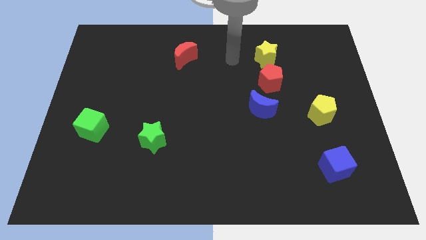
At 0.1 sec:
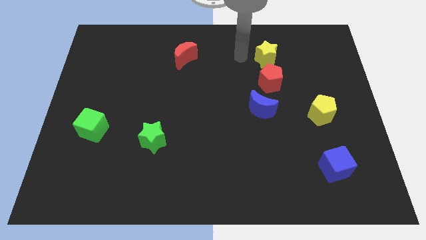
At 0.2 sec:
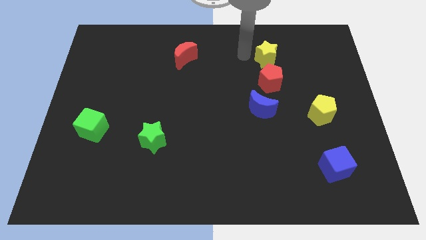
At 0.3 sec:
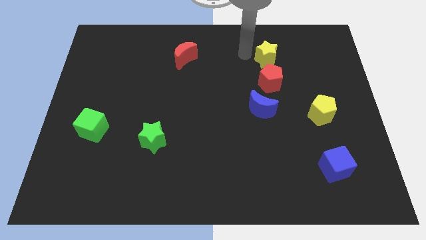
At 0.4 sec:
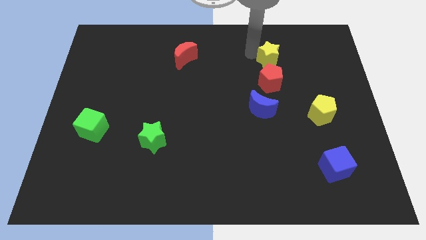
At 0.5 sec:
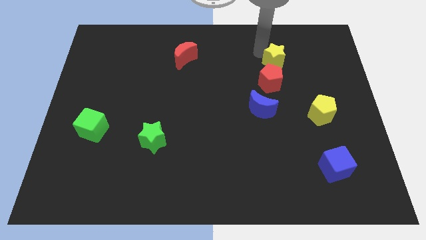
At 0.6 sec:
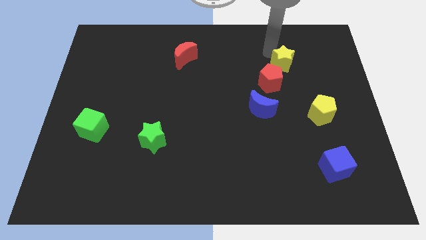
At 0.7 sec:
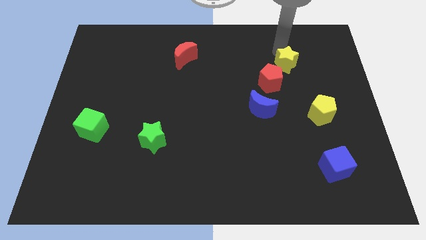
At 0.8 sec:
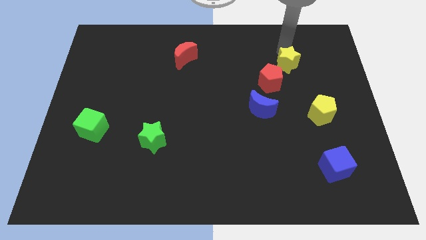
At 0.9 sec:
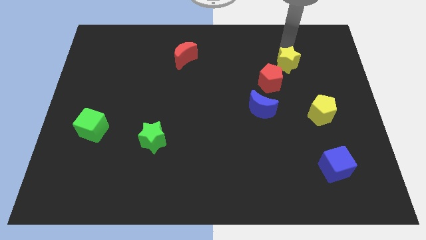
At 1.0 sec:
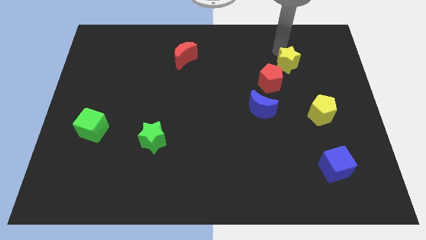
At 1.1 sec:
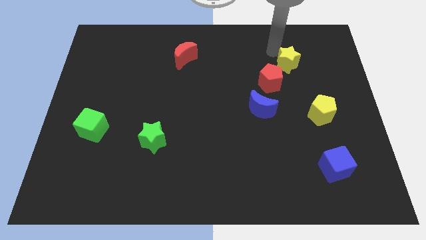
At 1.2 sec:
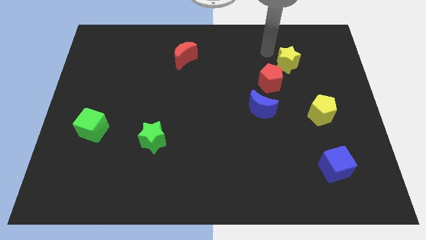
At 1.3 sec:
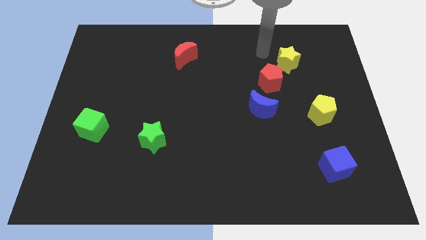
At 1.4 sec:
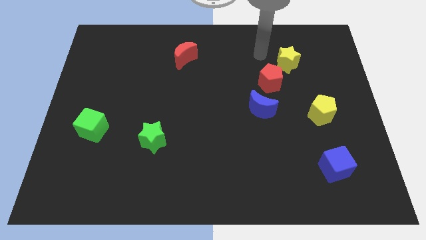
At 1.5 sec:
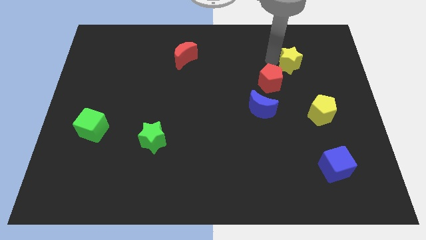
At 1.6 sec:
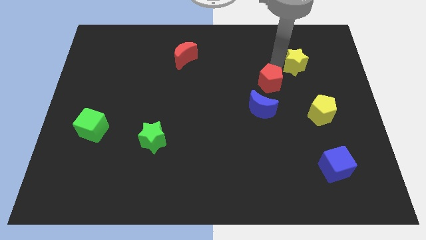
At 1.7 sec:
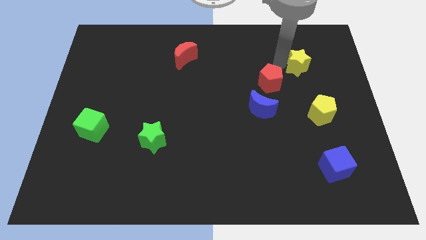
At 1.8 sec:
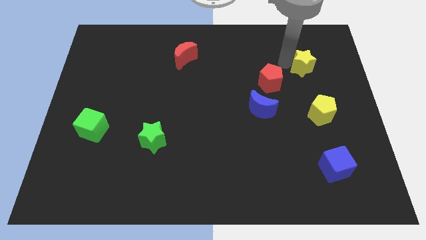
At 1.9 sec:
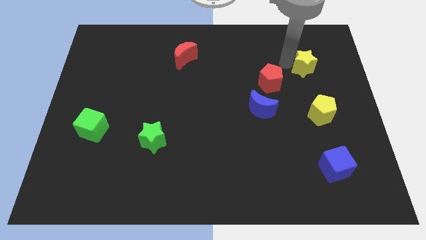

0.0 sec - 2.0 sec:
push the yellow star vertically to the top of the yellow pentagon

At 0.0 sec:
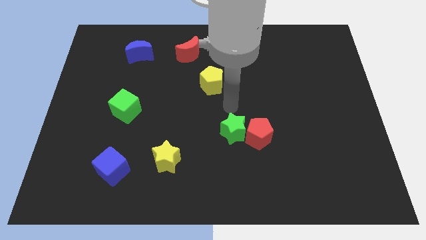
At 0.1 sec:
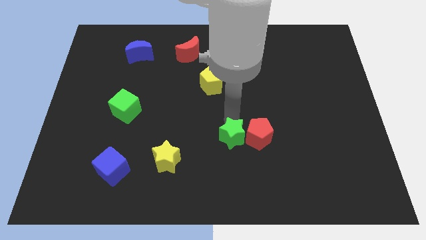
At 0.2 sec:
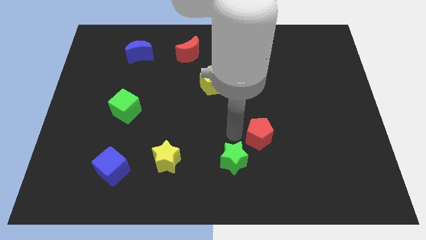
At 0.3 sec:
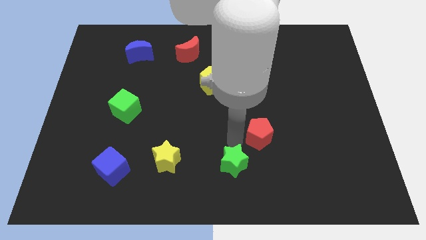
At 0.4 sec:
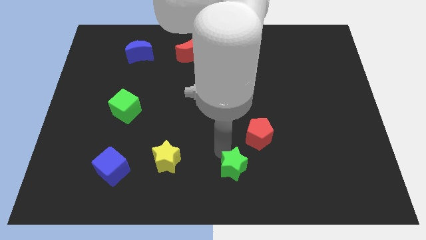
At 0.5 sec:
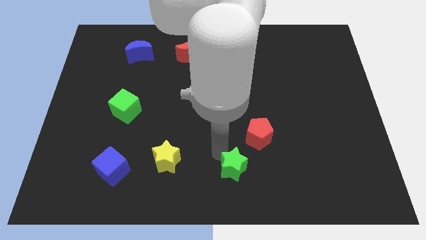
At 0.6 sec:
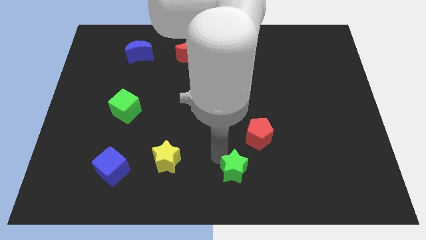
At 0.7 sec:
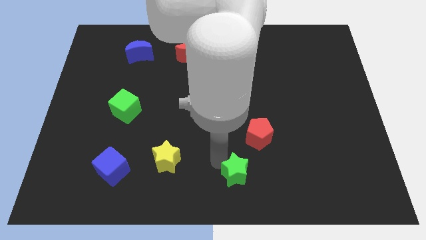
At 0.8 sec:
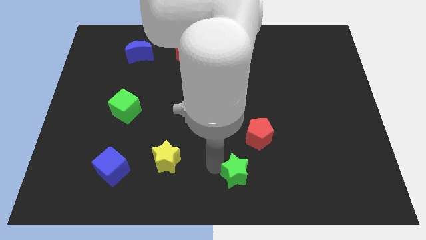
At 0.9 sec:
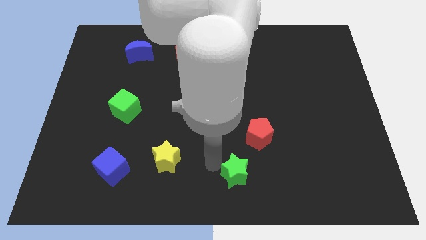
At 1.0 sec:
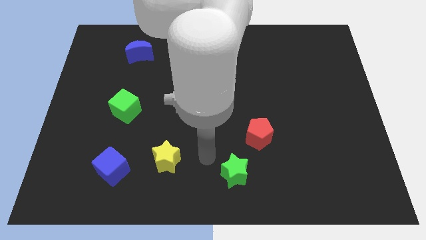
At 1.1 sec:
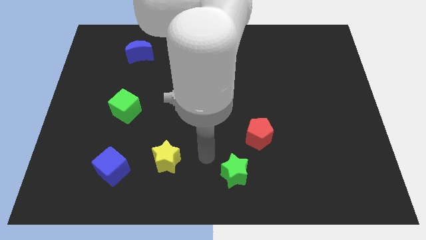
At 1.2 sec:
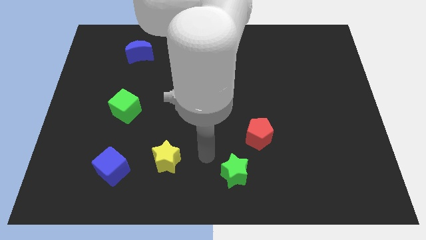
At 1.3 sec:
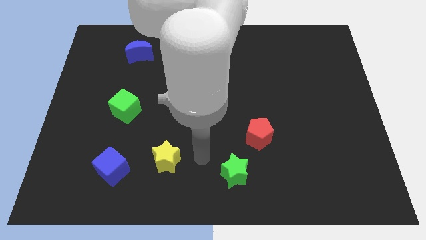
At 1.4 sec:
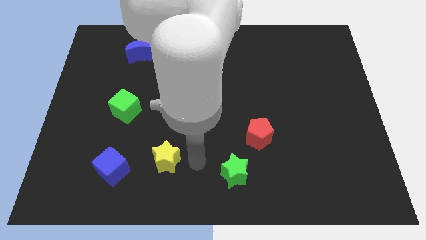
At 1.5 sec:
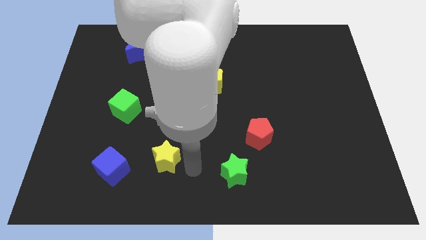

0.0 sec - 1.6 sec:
move the green star away from the left side of the red pentagon

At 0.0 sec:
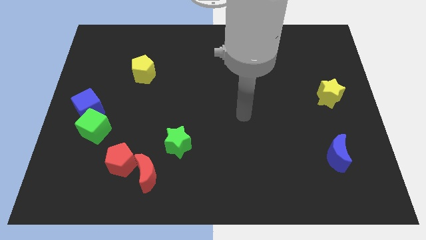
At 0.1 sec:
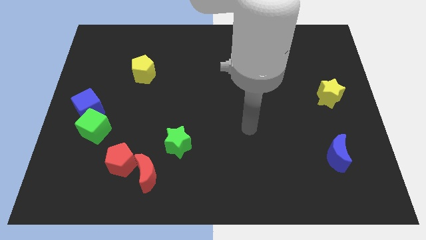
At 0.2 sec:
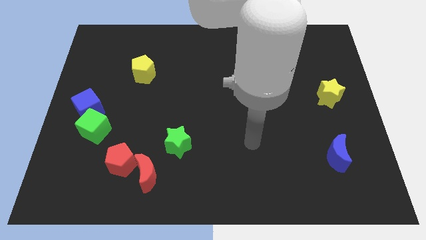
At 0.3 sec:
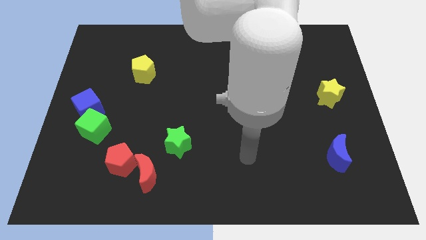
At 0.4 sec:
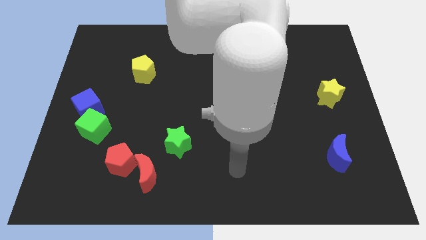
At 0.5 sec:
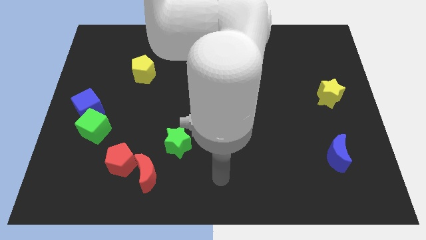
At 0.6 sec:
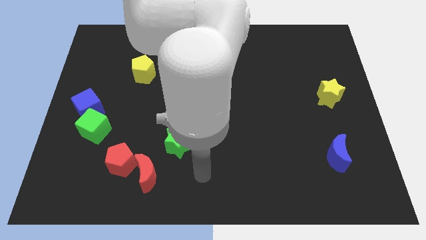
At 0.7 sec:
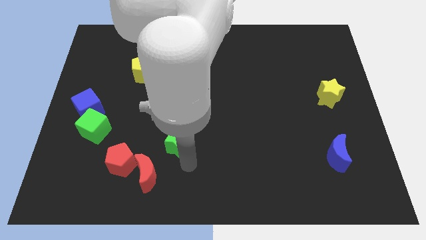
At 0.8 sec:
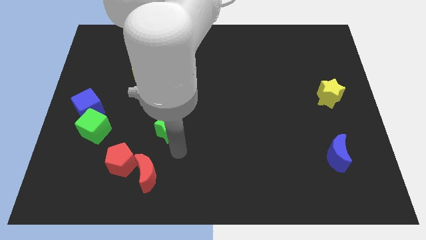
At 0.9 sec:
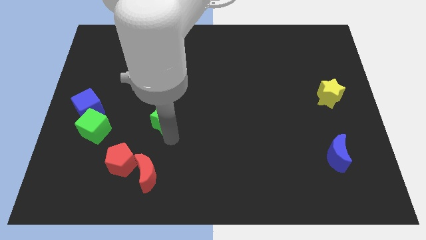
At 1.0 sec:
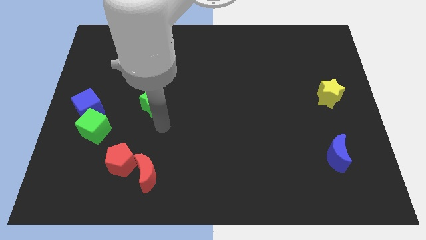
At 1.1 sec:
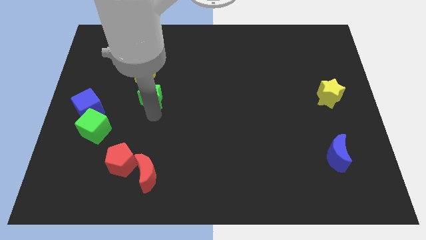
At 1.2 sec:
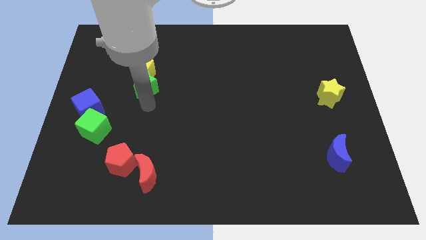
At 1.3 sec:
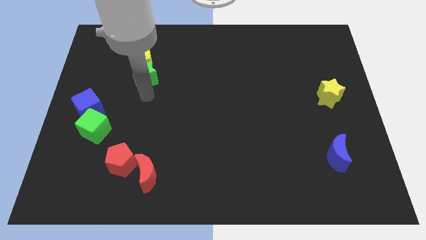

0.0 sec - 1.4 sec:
place the green star right to the blue cube

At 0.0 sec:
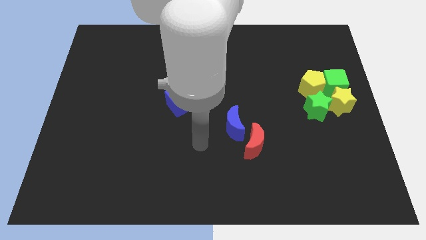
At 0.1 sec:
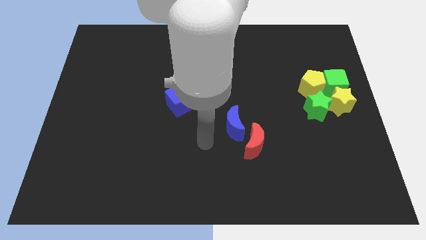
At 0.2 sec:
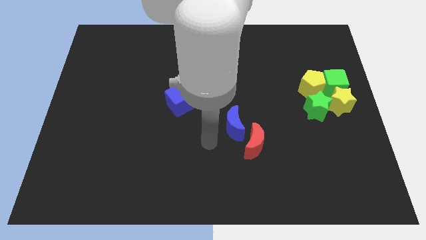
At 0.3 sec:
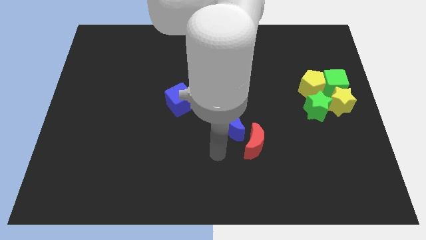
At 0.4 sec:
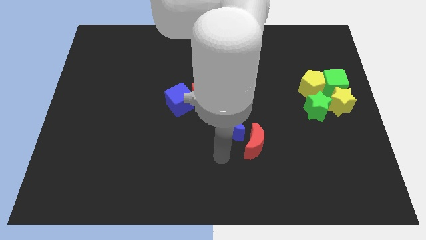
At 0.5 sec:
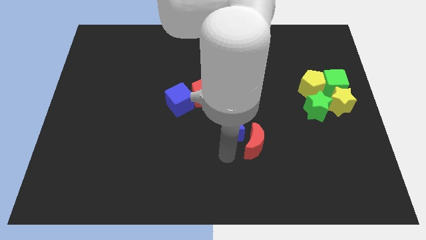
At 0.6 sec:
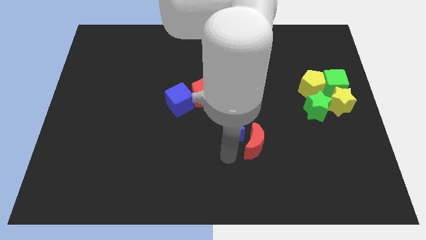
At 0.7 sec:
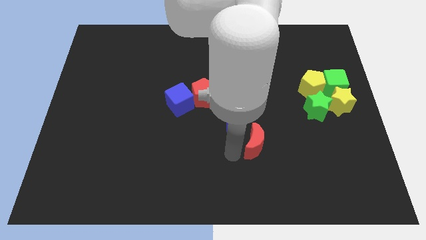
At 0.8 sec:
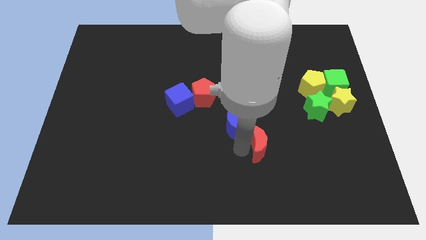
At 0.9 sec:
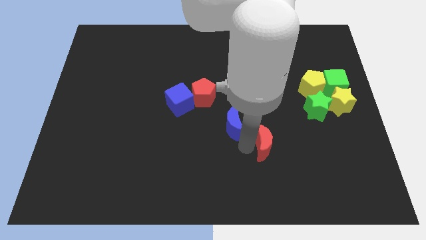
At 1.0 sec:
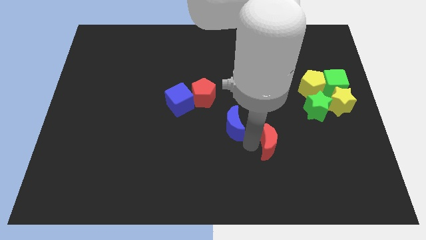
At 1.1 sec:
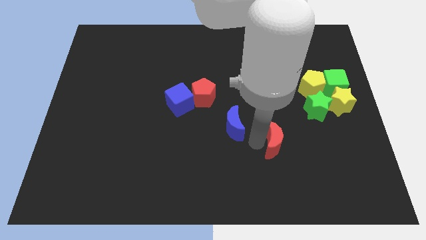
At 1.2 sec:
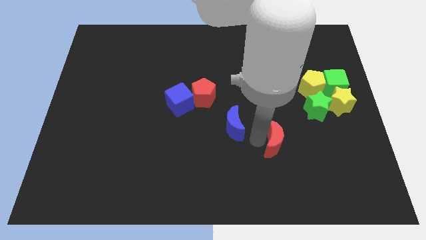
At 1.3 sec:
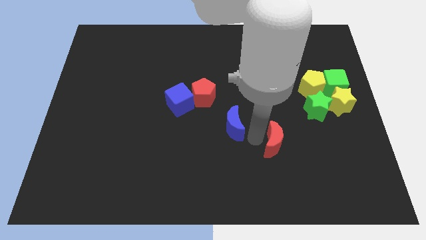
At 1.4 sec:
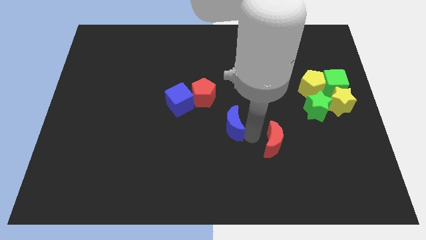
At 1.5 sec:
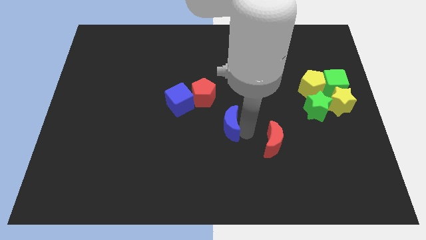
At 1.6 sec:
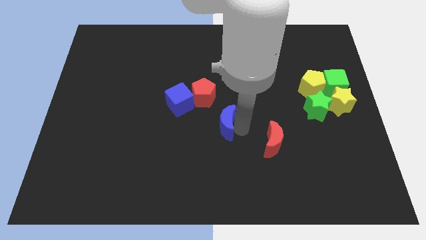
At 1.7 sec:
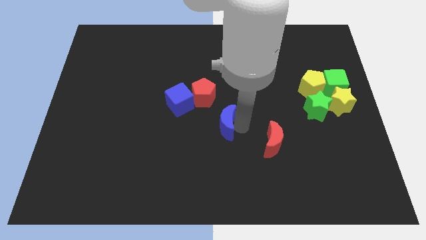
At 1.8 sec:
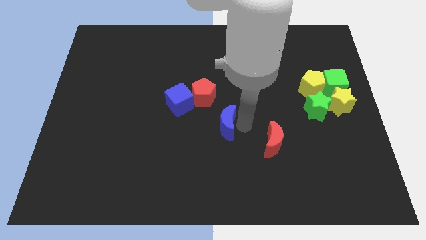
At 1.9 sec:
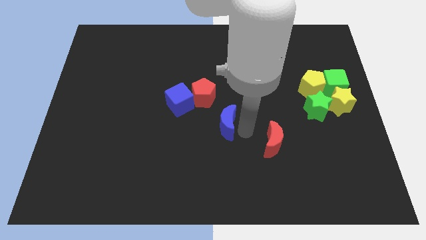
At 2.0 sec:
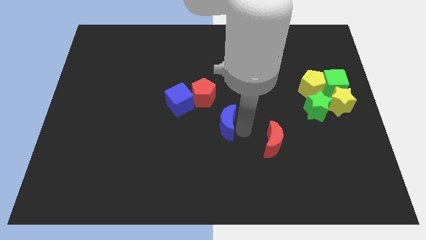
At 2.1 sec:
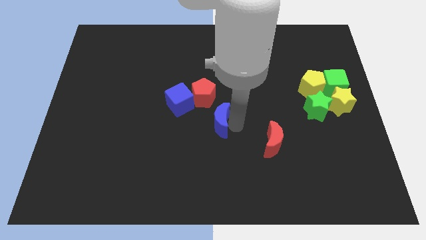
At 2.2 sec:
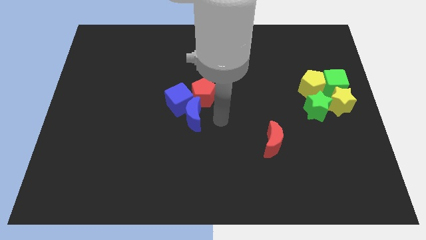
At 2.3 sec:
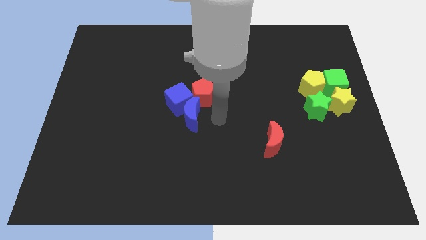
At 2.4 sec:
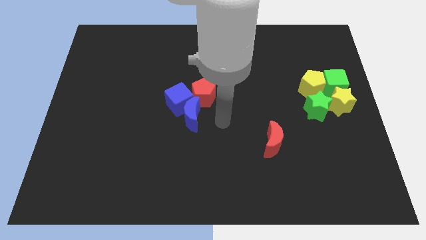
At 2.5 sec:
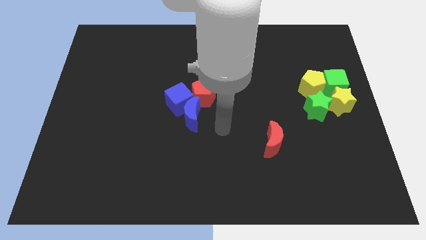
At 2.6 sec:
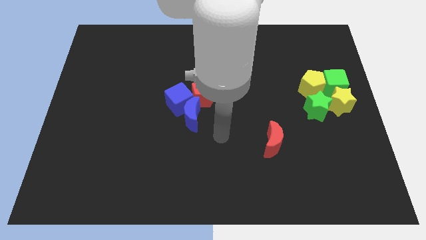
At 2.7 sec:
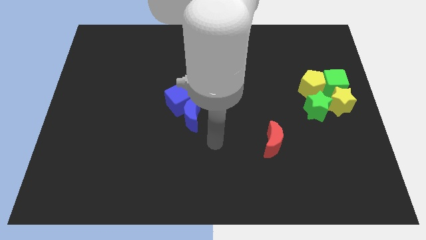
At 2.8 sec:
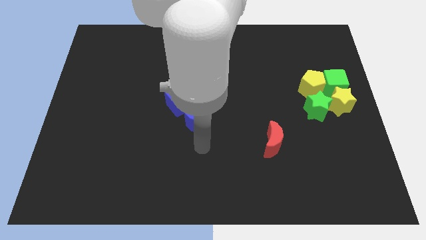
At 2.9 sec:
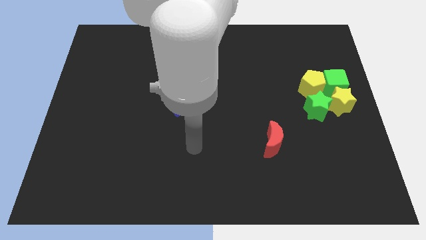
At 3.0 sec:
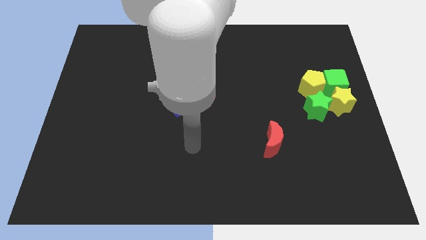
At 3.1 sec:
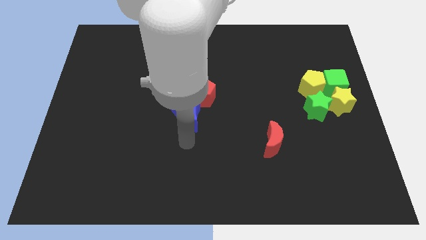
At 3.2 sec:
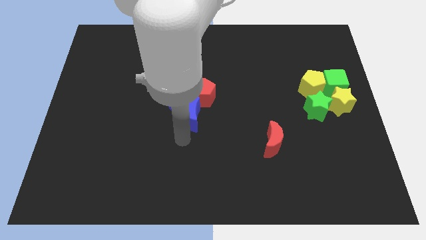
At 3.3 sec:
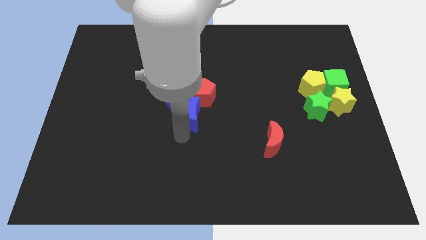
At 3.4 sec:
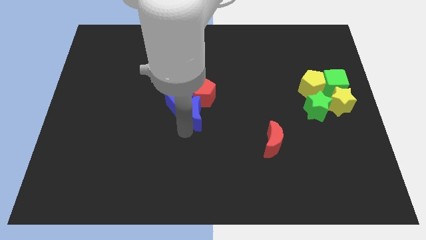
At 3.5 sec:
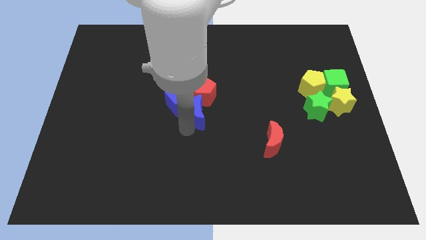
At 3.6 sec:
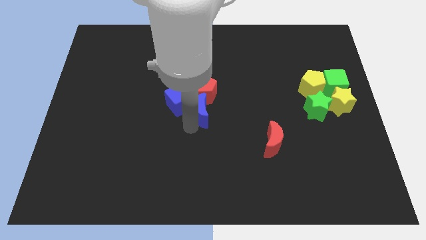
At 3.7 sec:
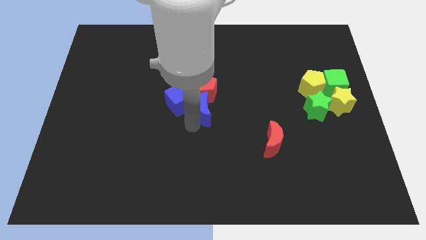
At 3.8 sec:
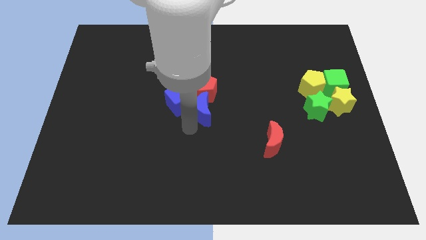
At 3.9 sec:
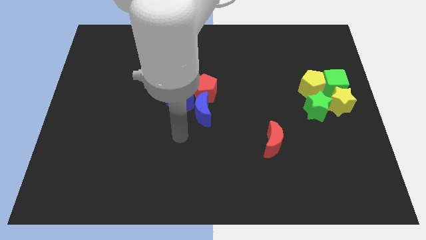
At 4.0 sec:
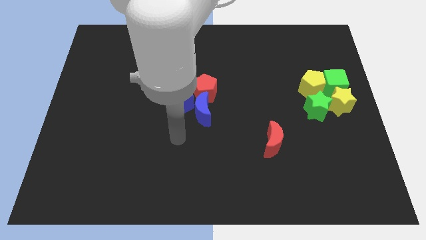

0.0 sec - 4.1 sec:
place the blue crescent below the red pentagon
